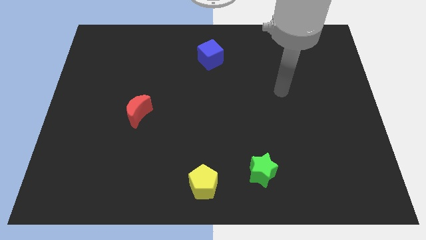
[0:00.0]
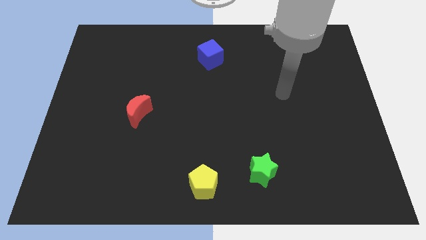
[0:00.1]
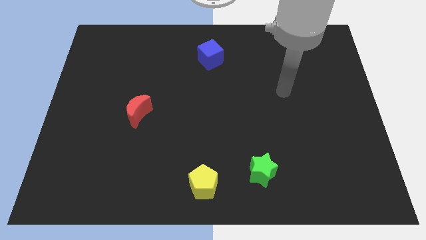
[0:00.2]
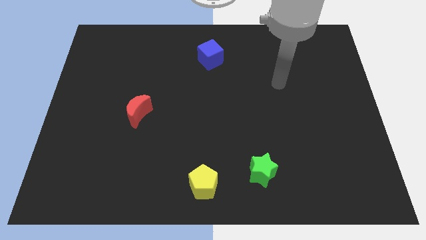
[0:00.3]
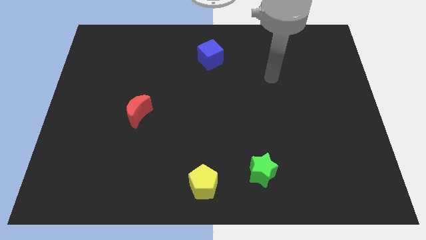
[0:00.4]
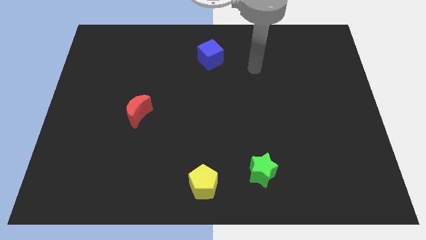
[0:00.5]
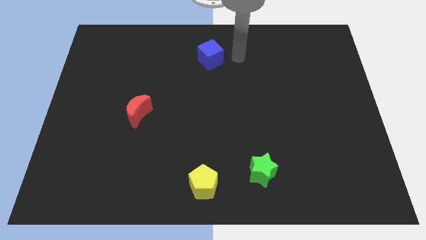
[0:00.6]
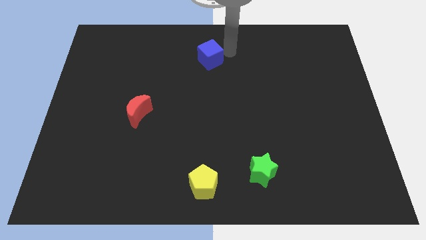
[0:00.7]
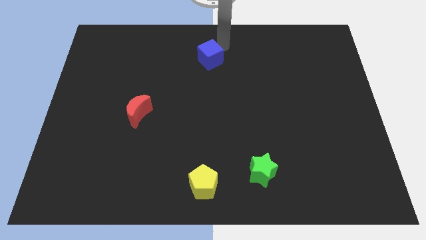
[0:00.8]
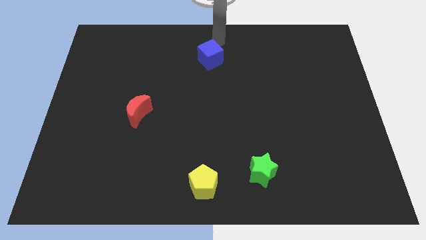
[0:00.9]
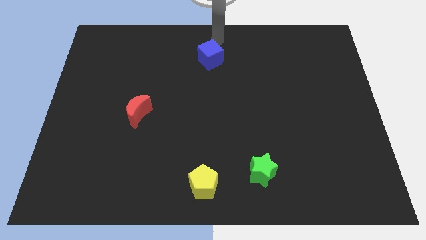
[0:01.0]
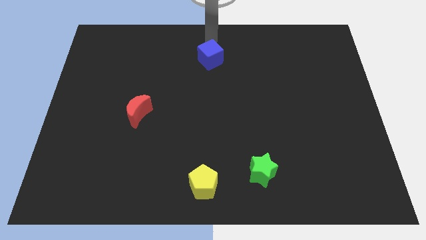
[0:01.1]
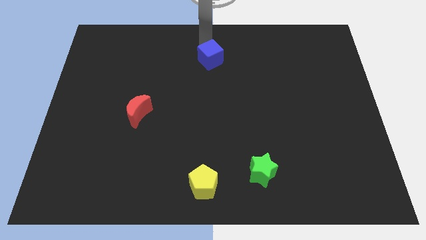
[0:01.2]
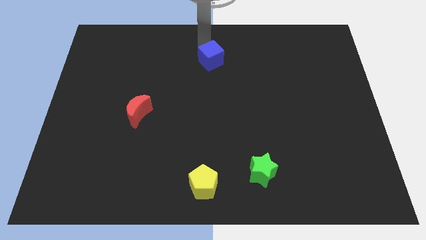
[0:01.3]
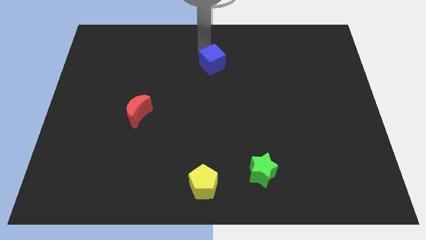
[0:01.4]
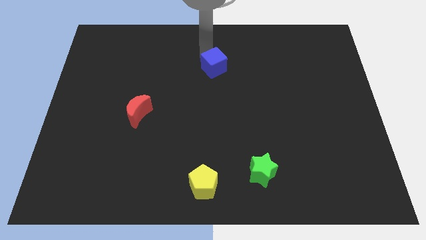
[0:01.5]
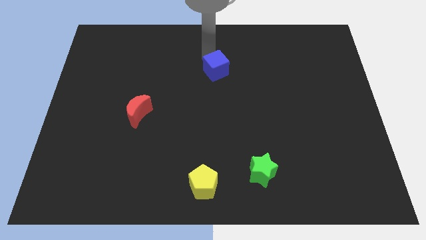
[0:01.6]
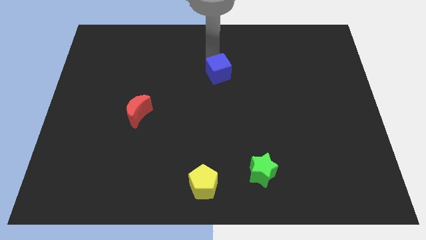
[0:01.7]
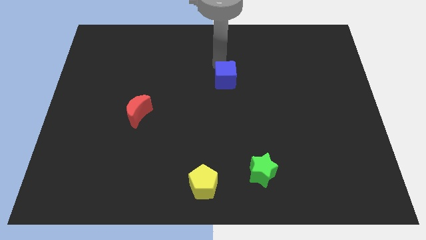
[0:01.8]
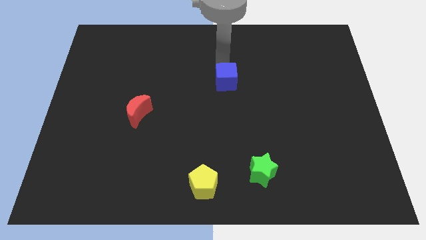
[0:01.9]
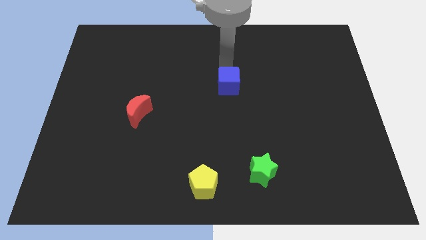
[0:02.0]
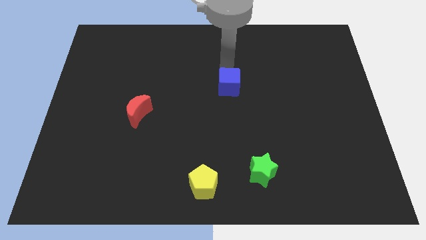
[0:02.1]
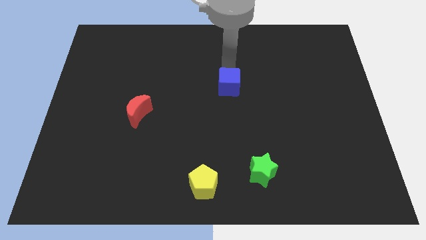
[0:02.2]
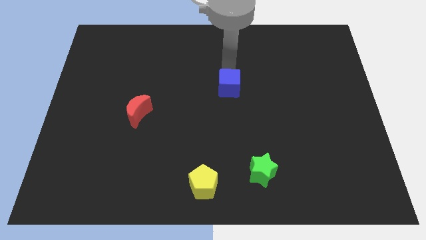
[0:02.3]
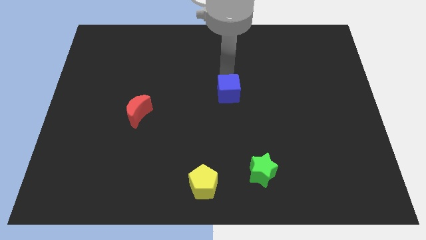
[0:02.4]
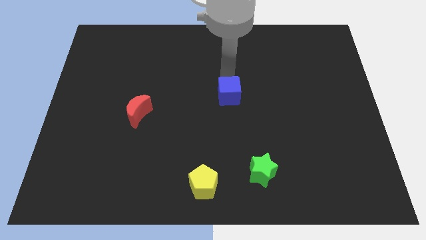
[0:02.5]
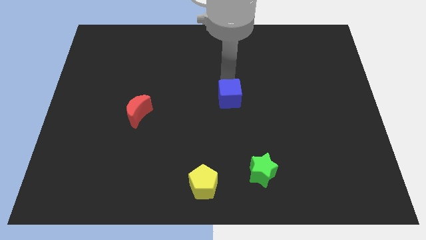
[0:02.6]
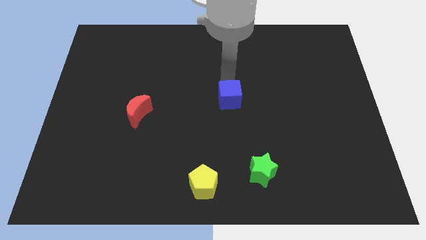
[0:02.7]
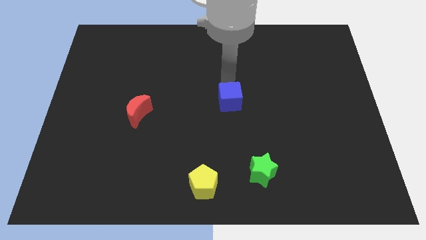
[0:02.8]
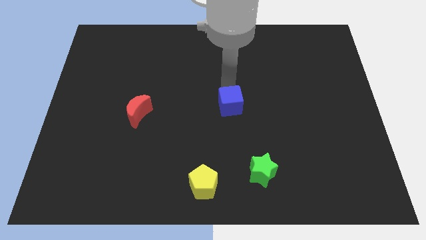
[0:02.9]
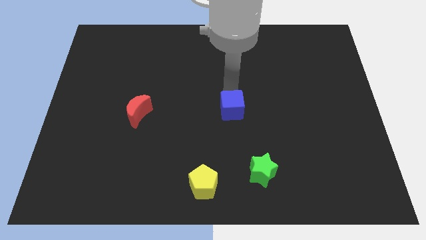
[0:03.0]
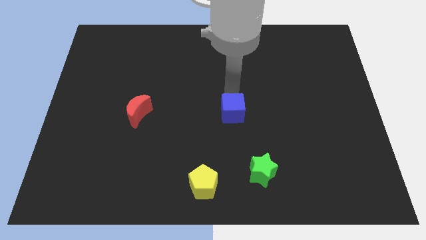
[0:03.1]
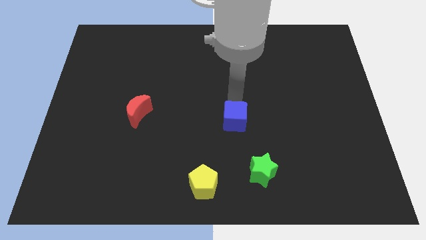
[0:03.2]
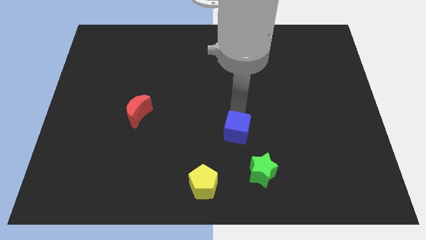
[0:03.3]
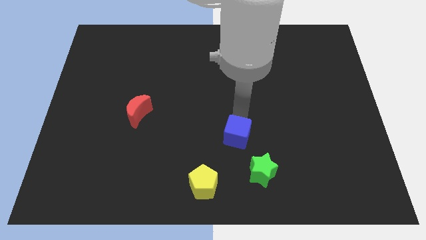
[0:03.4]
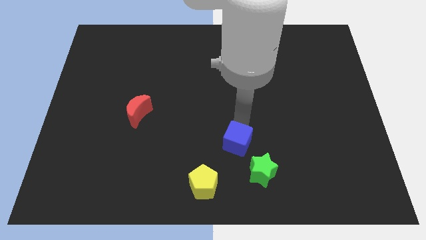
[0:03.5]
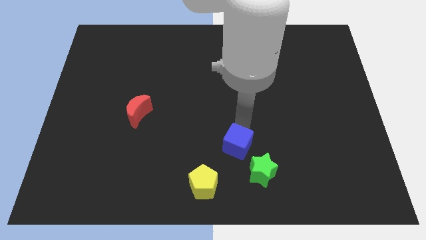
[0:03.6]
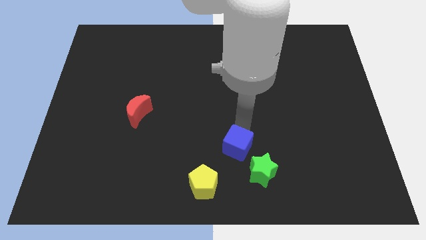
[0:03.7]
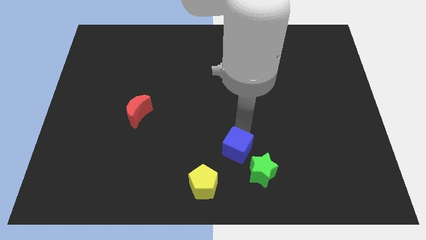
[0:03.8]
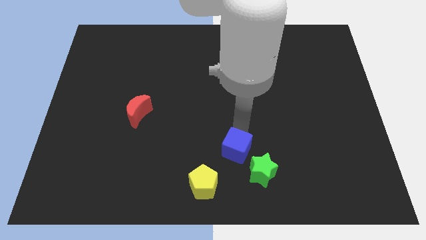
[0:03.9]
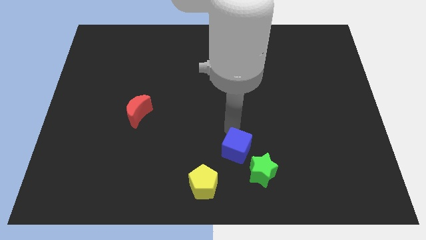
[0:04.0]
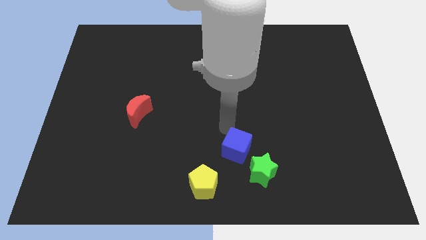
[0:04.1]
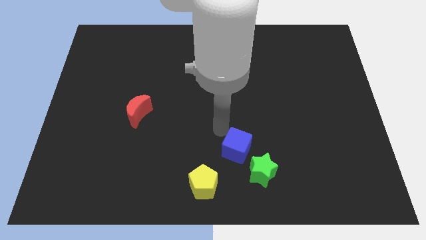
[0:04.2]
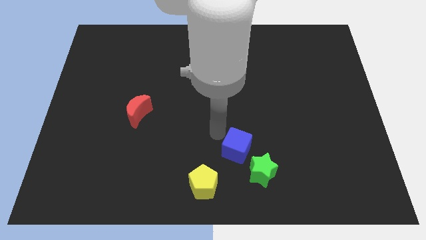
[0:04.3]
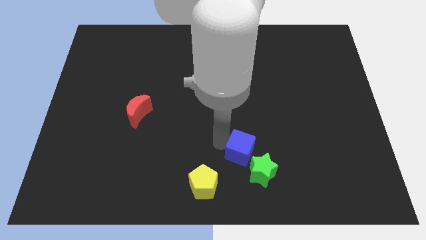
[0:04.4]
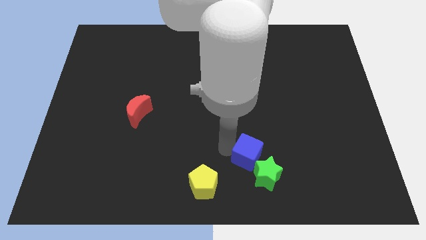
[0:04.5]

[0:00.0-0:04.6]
push the blue block towards the green block

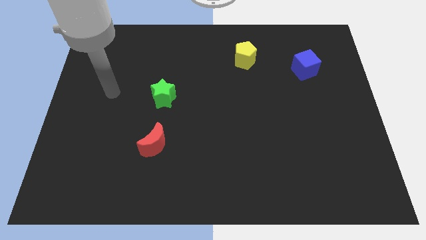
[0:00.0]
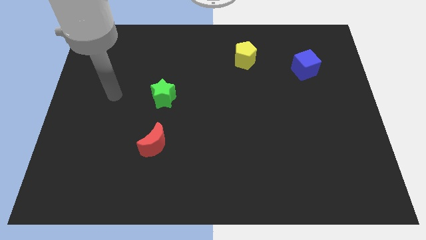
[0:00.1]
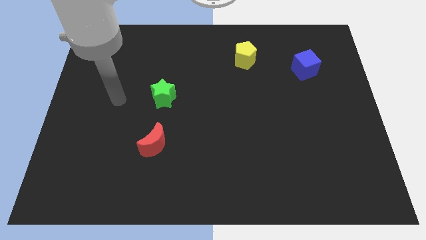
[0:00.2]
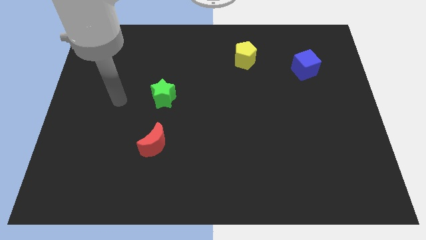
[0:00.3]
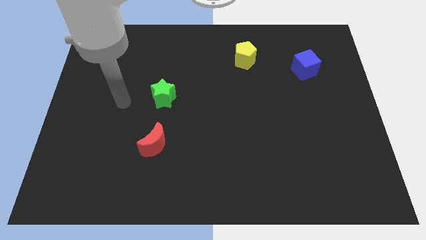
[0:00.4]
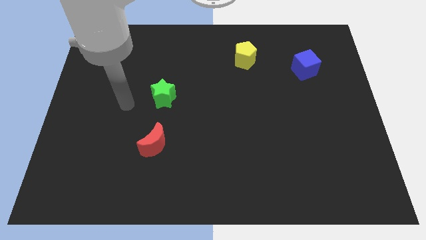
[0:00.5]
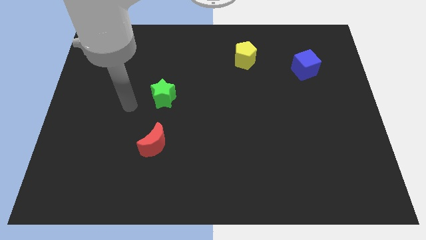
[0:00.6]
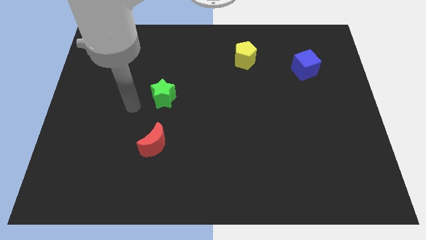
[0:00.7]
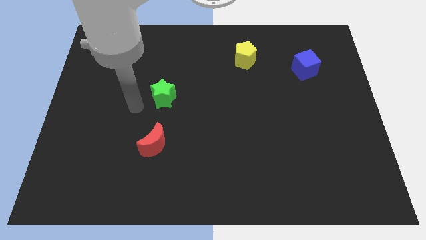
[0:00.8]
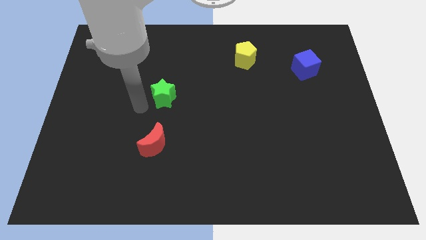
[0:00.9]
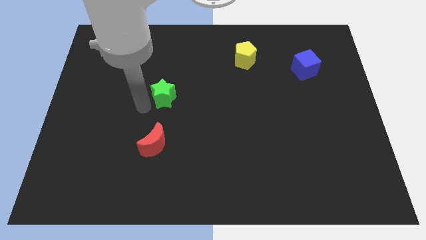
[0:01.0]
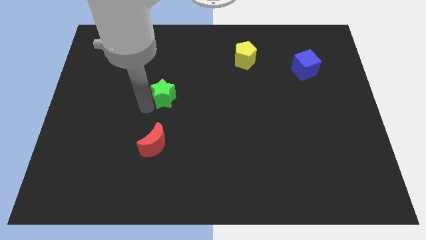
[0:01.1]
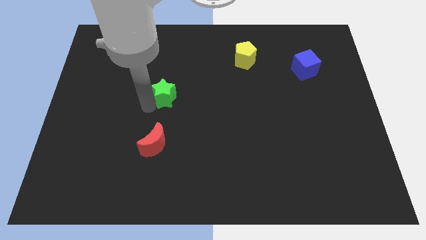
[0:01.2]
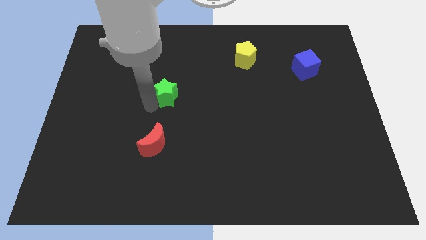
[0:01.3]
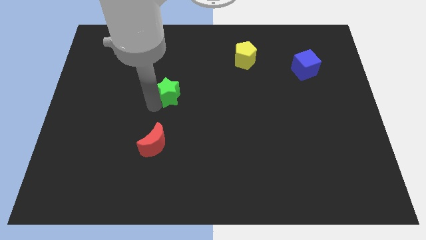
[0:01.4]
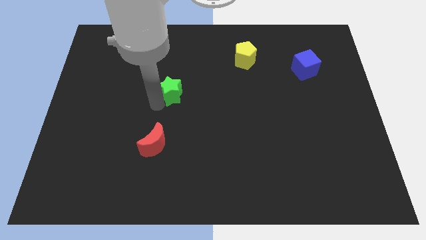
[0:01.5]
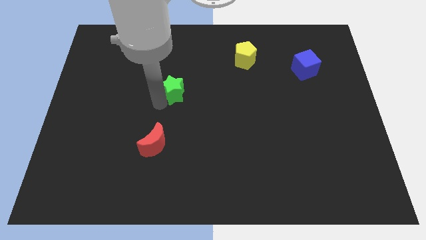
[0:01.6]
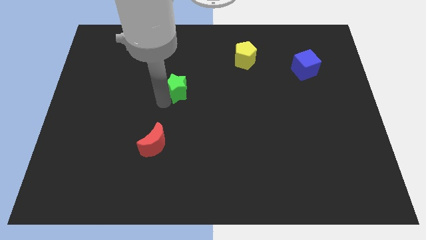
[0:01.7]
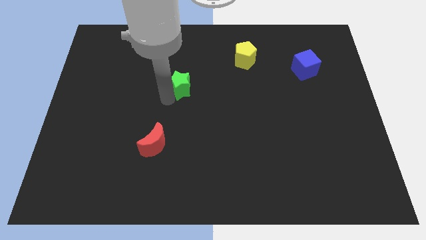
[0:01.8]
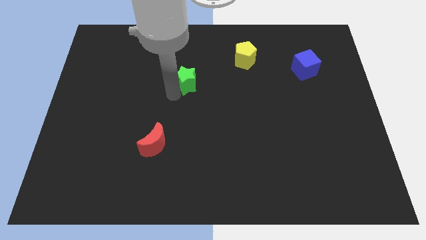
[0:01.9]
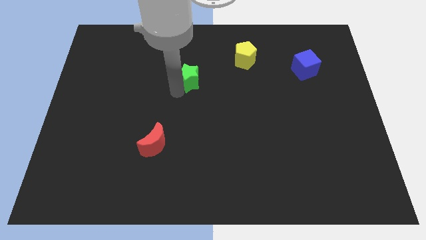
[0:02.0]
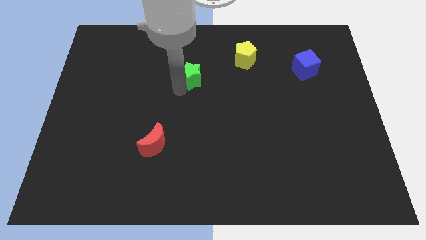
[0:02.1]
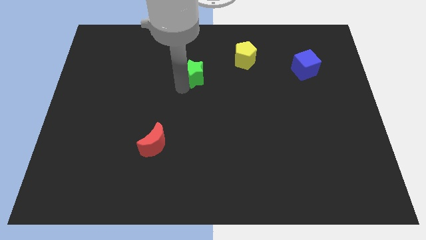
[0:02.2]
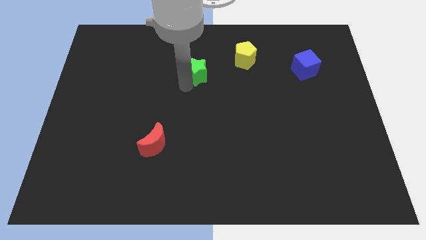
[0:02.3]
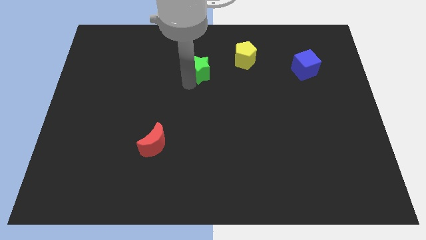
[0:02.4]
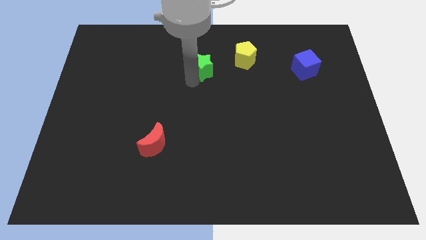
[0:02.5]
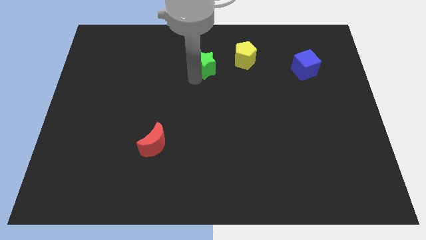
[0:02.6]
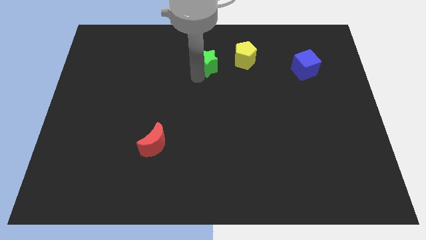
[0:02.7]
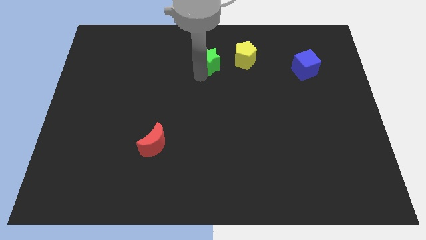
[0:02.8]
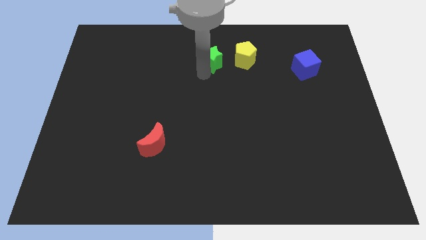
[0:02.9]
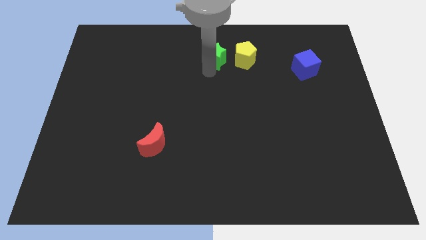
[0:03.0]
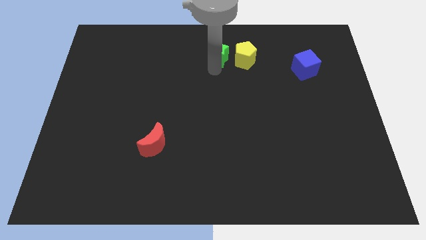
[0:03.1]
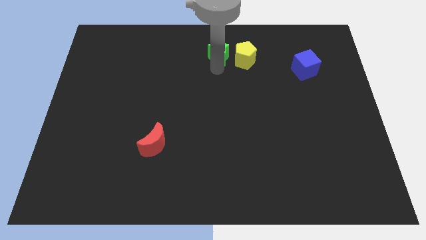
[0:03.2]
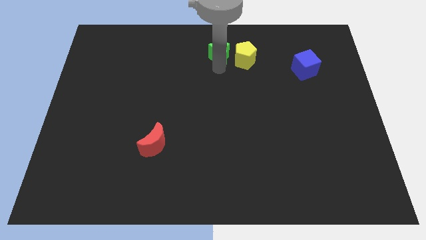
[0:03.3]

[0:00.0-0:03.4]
put the star to the yellow pentagon

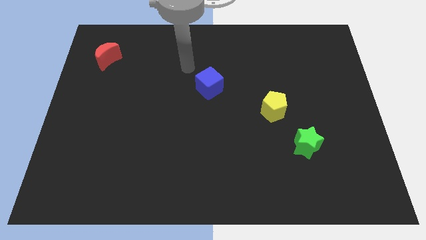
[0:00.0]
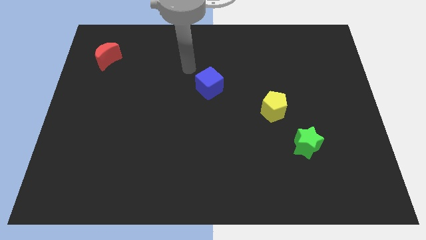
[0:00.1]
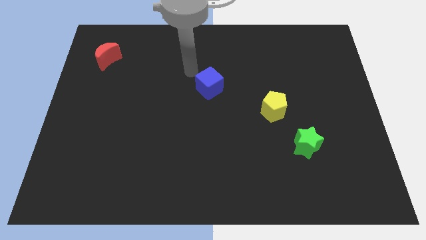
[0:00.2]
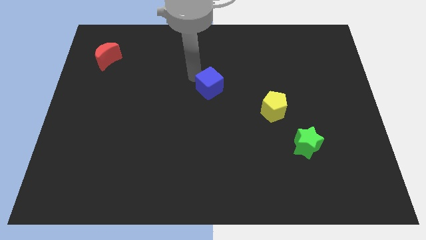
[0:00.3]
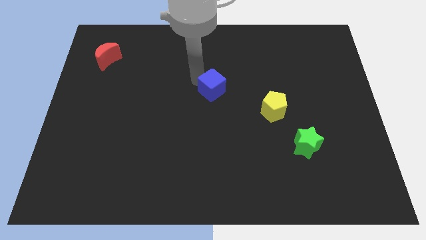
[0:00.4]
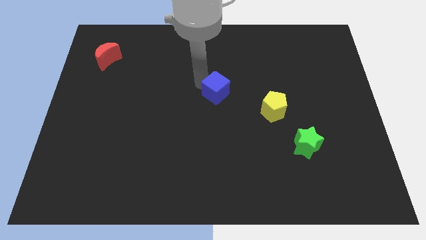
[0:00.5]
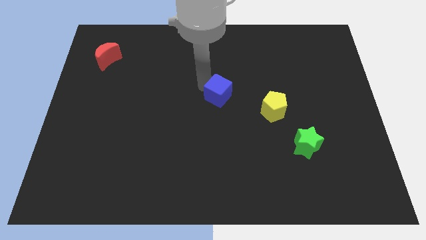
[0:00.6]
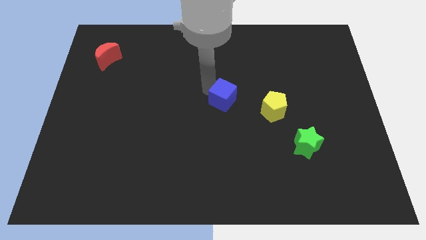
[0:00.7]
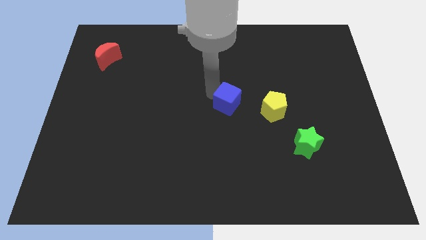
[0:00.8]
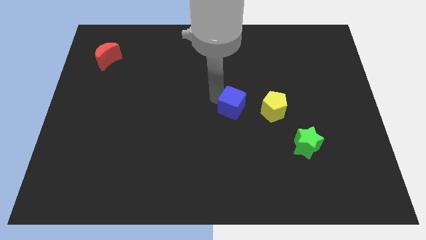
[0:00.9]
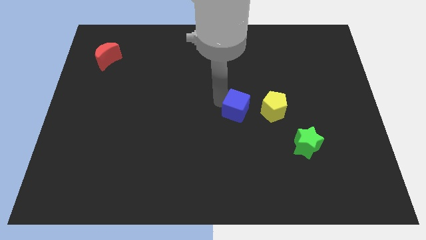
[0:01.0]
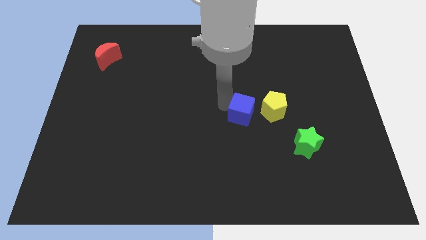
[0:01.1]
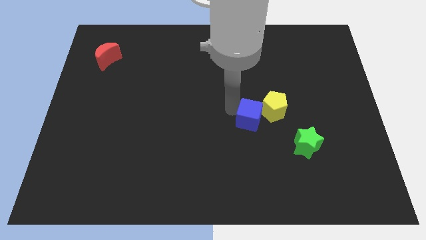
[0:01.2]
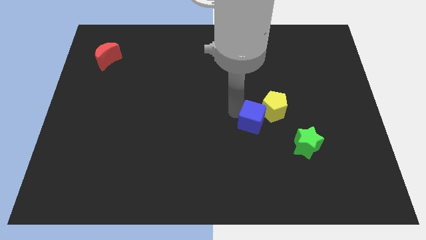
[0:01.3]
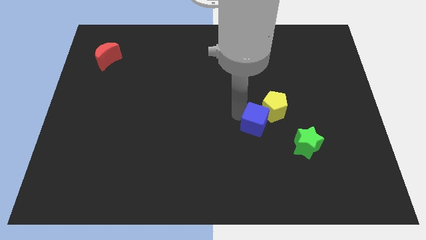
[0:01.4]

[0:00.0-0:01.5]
push the blue block to the yellow pentagon
